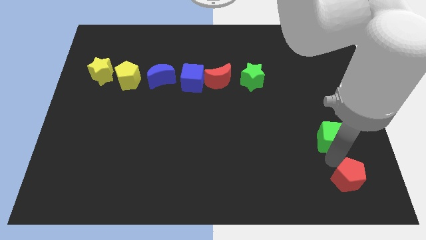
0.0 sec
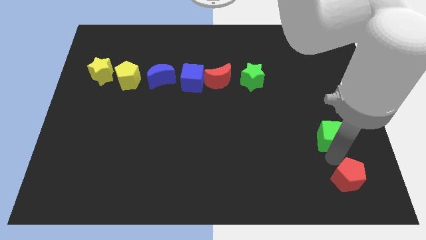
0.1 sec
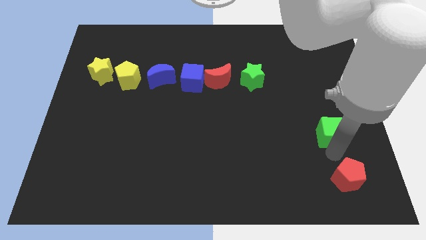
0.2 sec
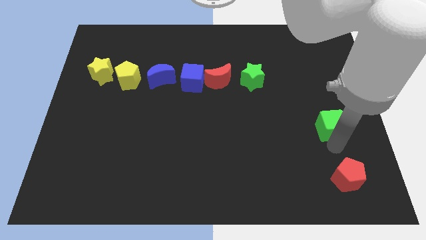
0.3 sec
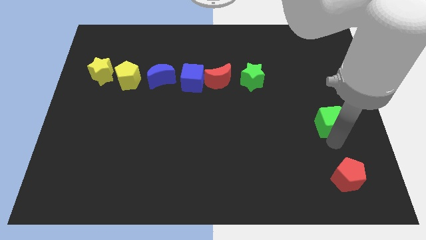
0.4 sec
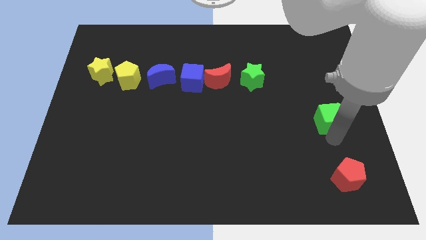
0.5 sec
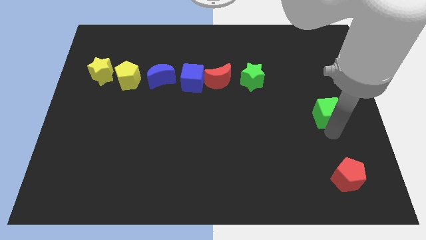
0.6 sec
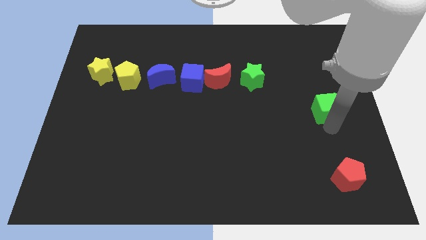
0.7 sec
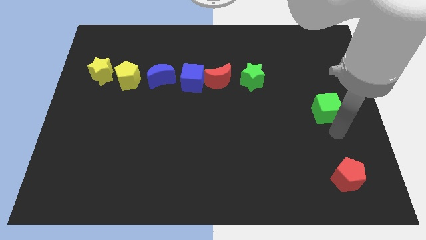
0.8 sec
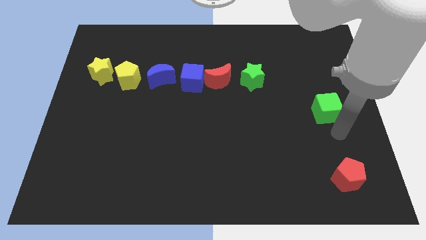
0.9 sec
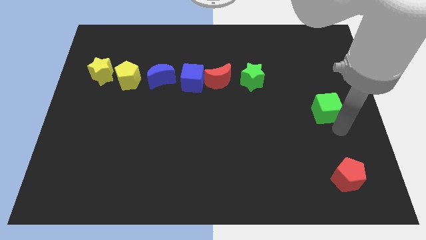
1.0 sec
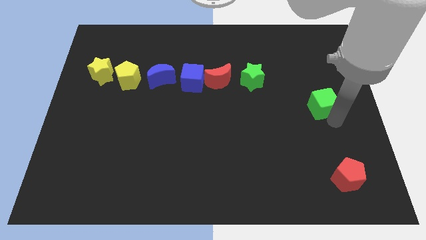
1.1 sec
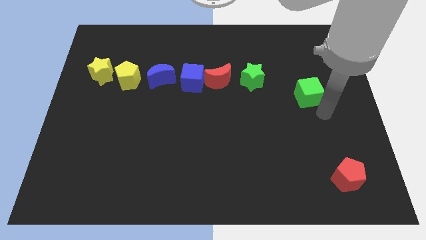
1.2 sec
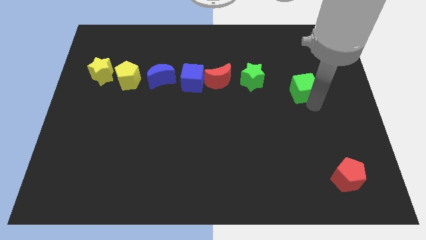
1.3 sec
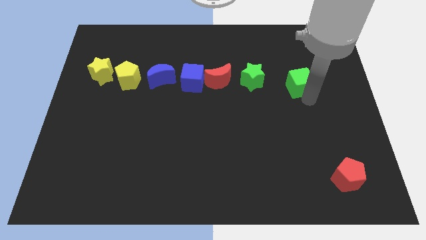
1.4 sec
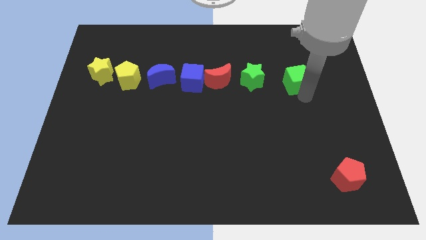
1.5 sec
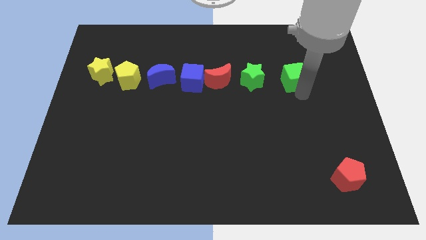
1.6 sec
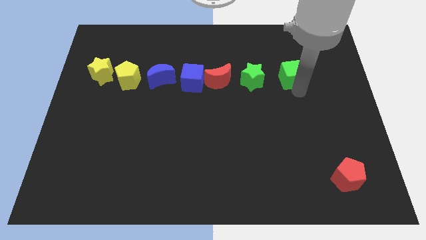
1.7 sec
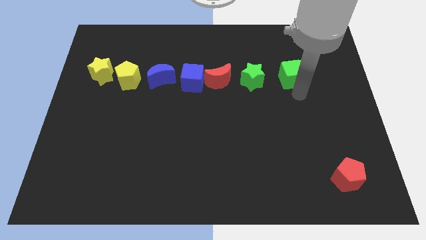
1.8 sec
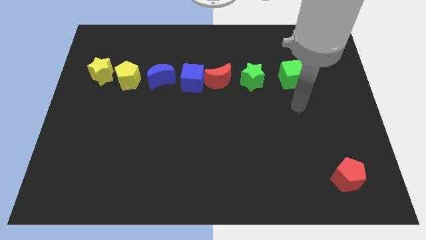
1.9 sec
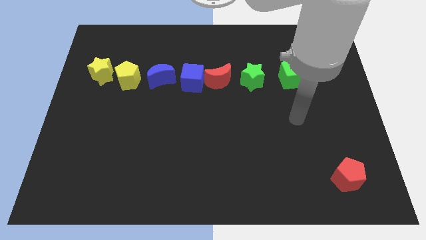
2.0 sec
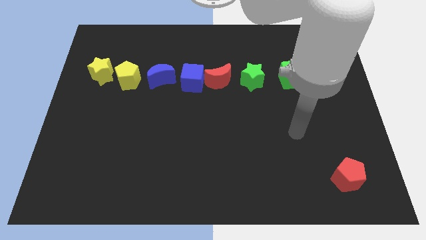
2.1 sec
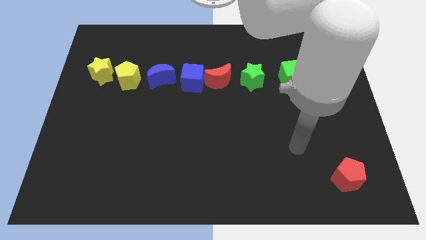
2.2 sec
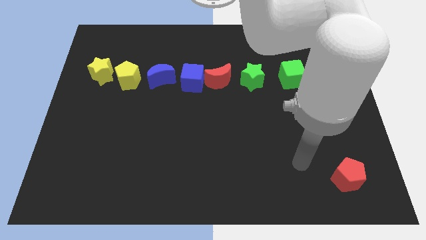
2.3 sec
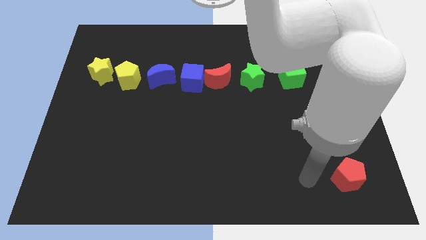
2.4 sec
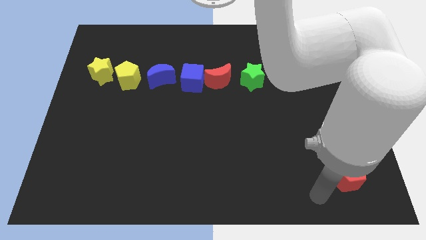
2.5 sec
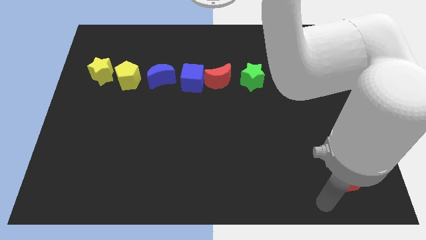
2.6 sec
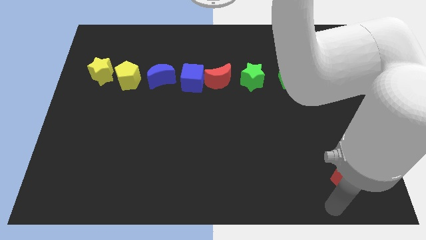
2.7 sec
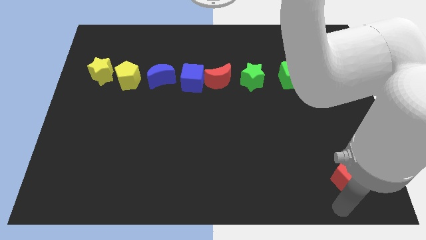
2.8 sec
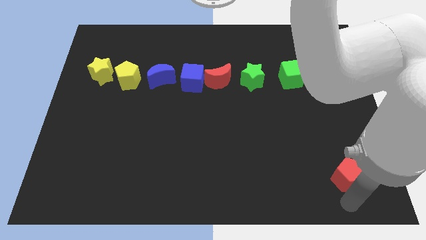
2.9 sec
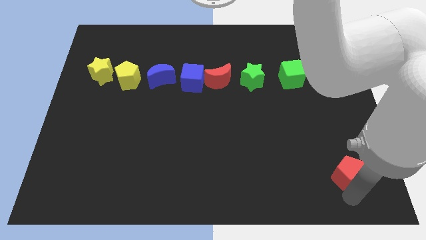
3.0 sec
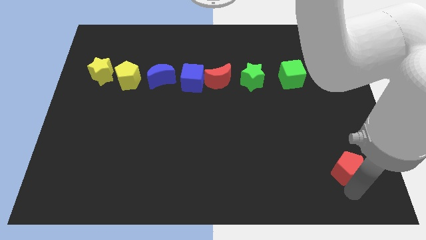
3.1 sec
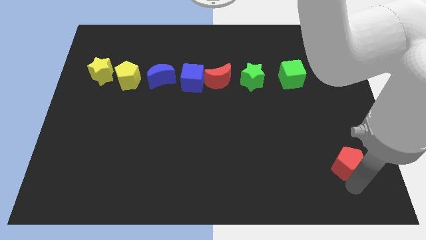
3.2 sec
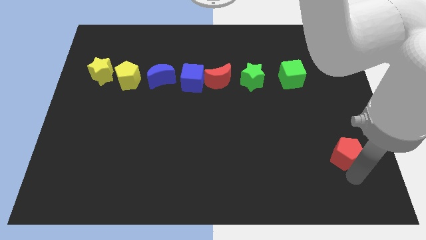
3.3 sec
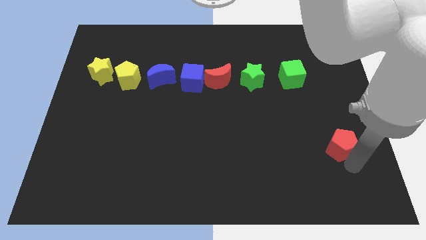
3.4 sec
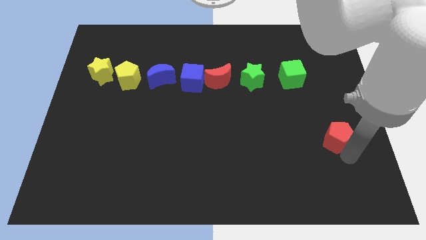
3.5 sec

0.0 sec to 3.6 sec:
push red pentagon slightly towards upwards

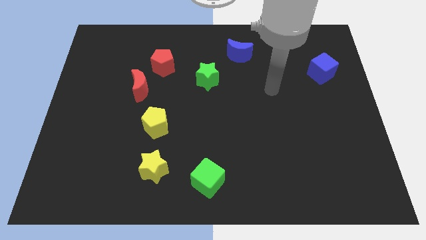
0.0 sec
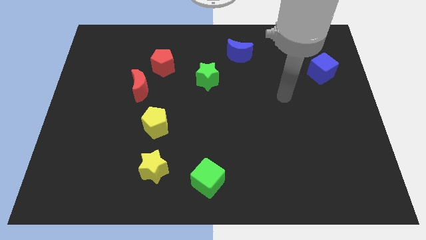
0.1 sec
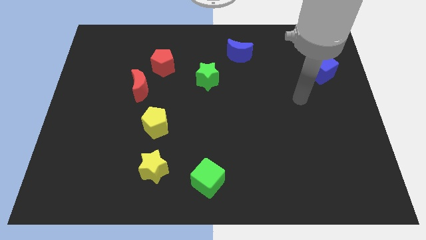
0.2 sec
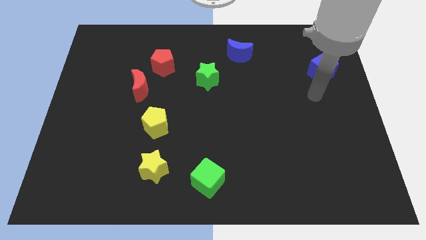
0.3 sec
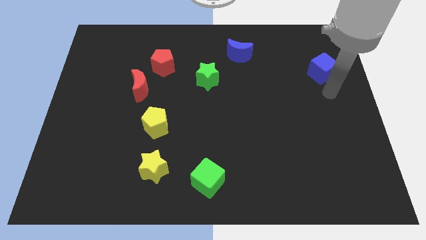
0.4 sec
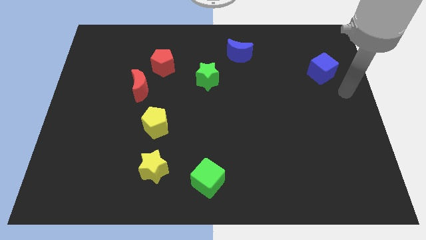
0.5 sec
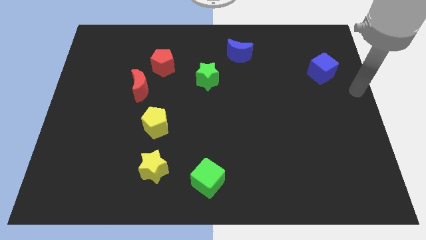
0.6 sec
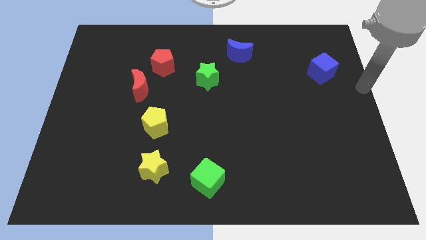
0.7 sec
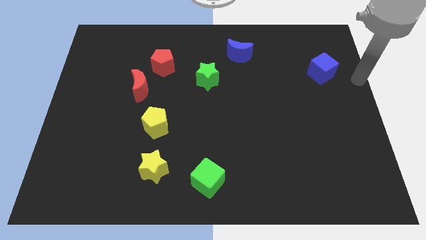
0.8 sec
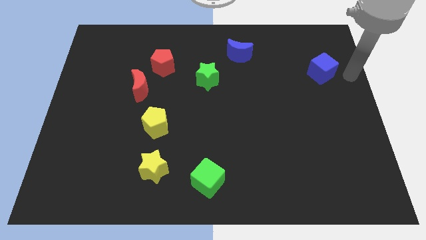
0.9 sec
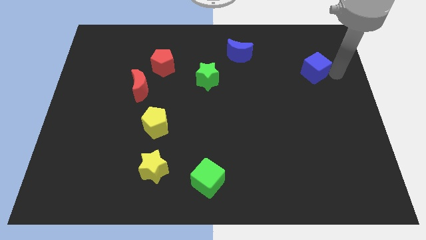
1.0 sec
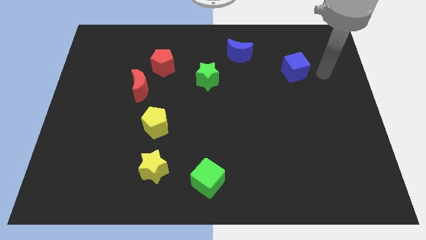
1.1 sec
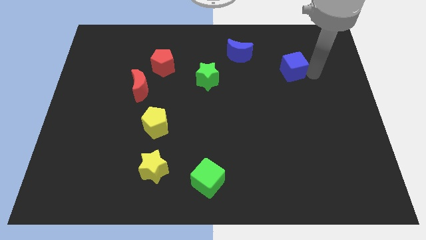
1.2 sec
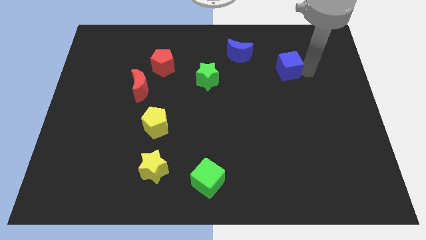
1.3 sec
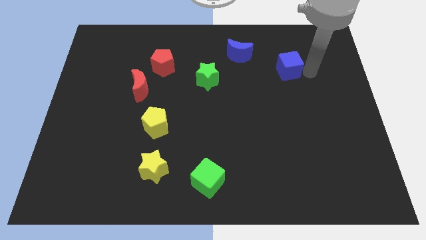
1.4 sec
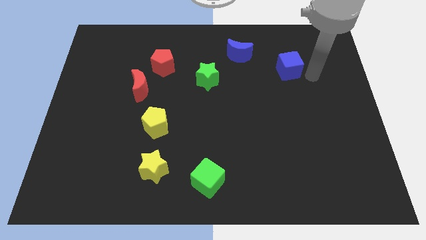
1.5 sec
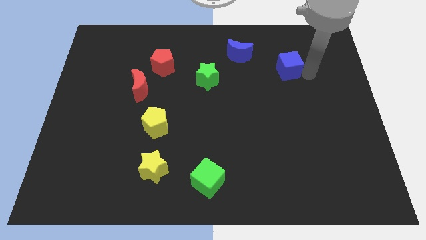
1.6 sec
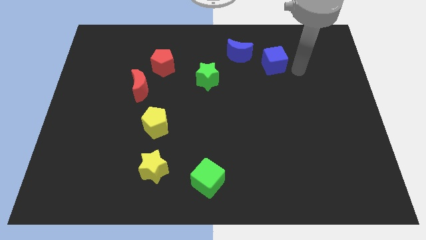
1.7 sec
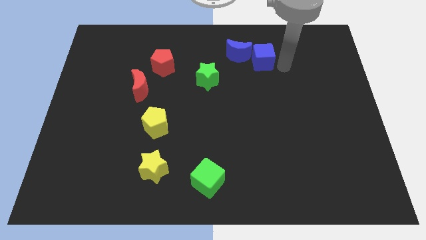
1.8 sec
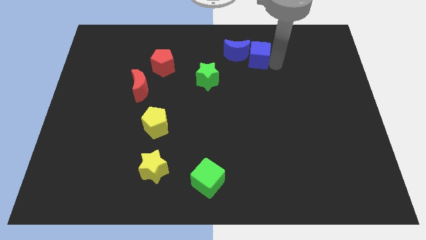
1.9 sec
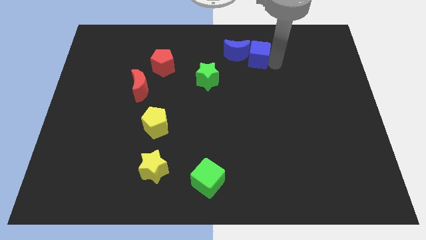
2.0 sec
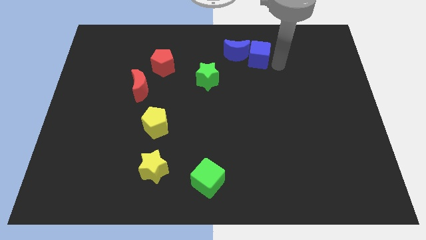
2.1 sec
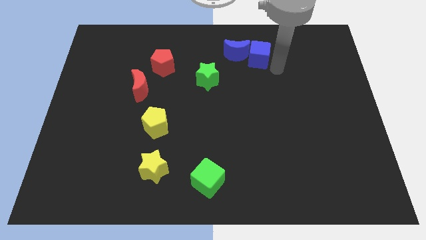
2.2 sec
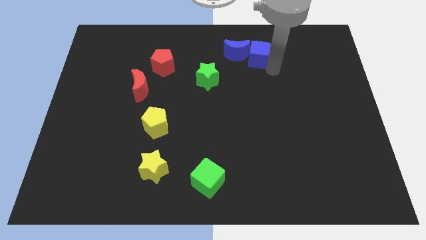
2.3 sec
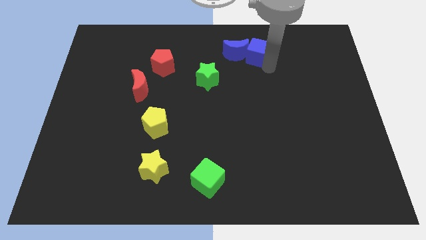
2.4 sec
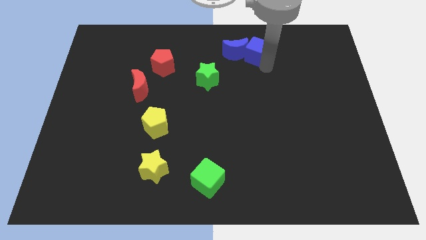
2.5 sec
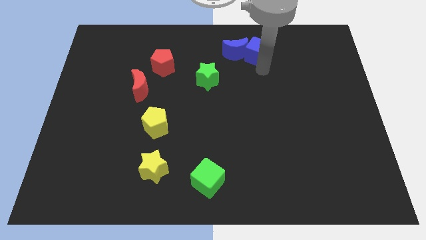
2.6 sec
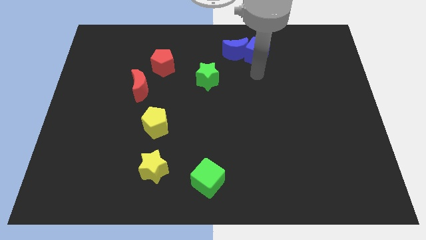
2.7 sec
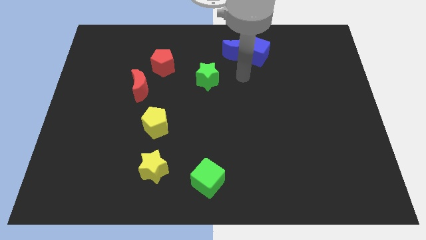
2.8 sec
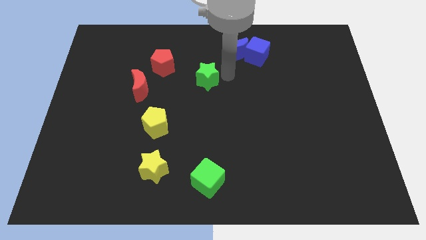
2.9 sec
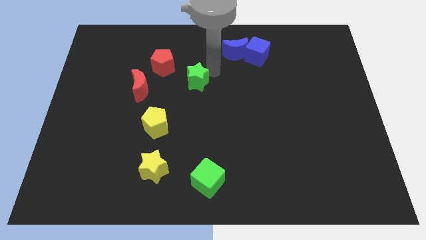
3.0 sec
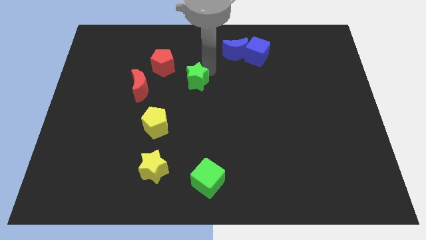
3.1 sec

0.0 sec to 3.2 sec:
push blue cube towards half blue moon

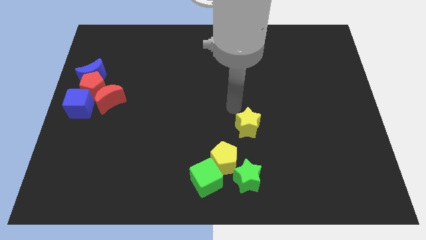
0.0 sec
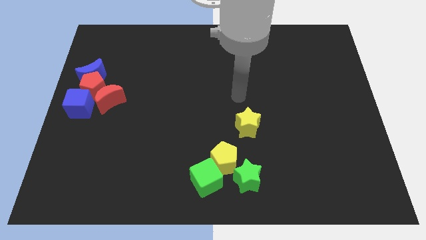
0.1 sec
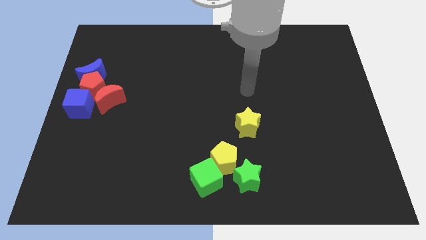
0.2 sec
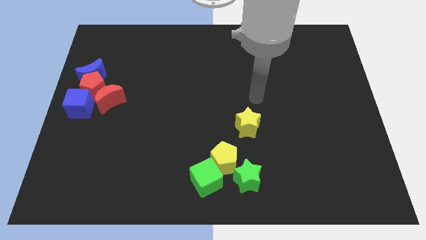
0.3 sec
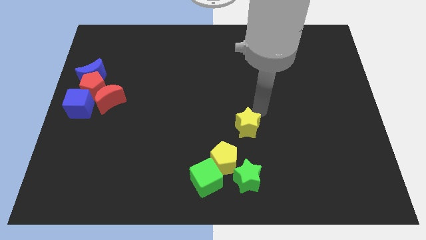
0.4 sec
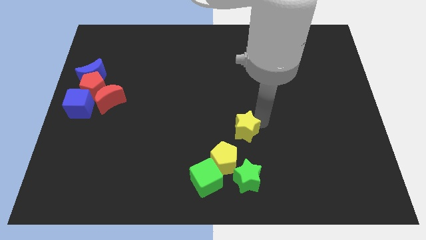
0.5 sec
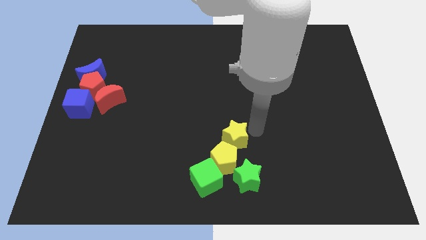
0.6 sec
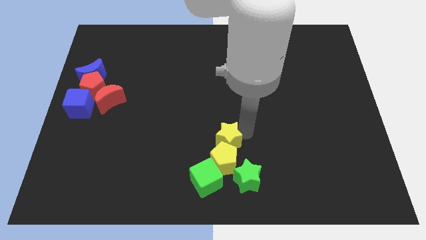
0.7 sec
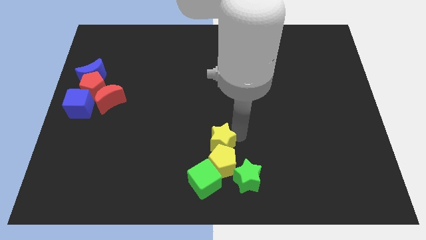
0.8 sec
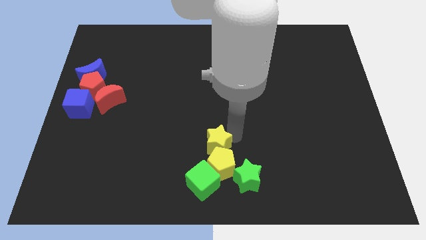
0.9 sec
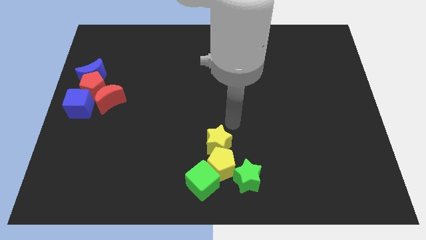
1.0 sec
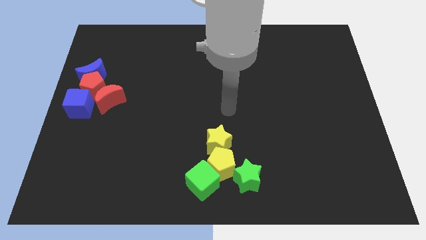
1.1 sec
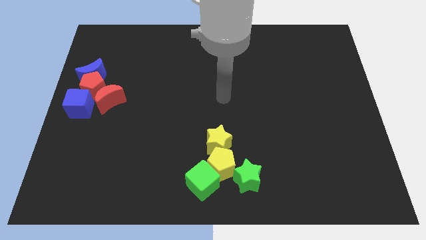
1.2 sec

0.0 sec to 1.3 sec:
push yellow star into the yellow green blocks

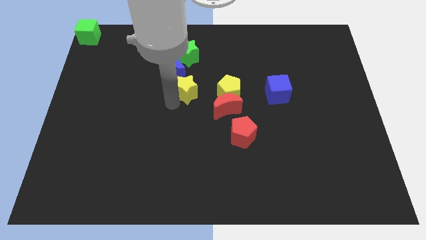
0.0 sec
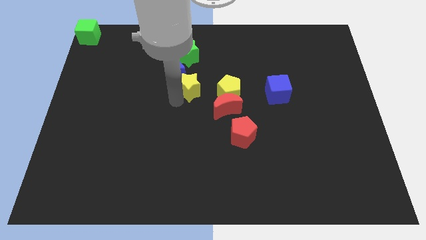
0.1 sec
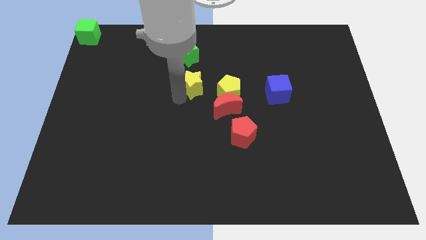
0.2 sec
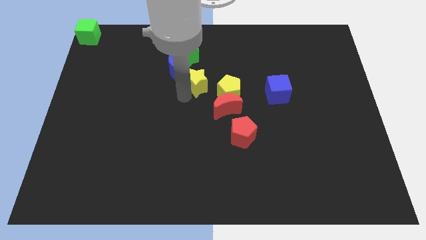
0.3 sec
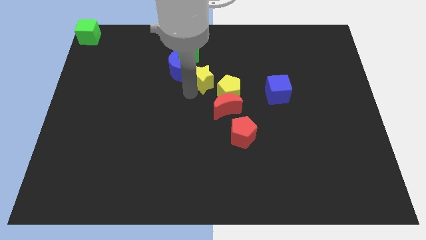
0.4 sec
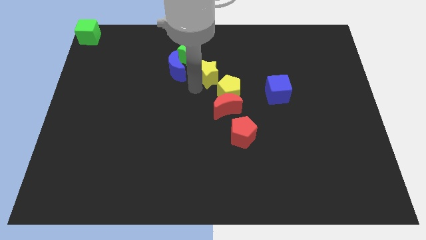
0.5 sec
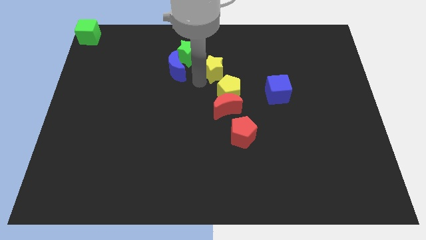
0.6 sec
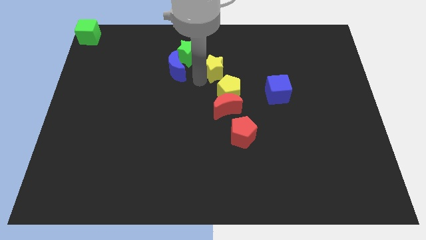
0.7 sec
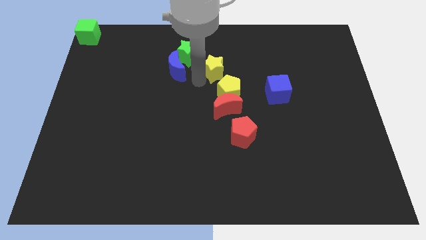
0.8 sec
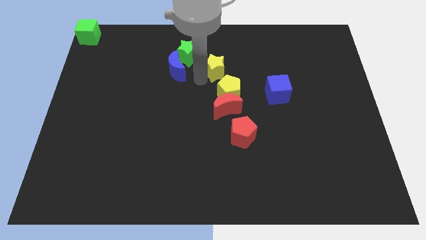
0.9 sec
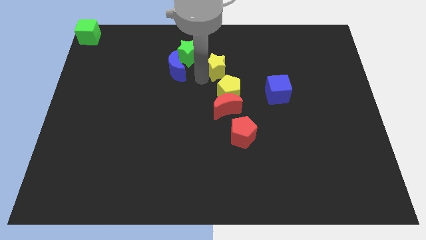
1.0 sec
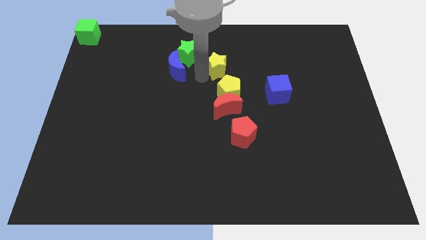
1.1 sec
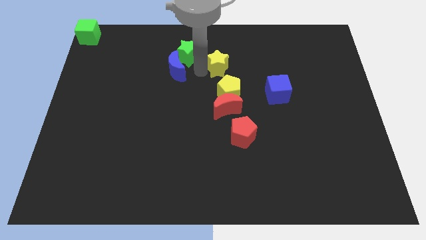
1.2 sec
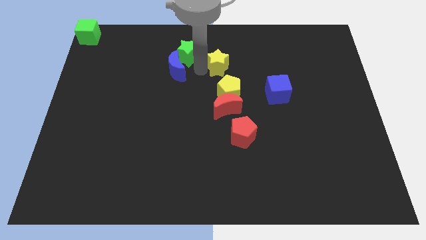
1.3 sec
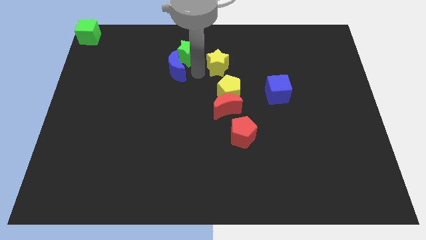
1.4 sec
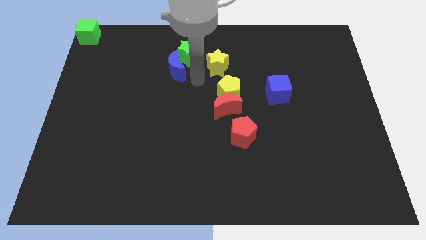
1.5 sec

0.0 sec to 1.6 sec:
push the yellow star right to the green star
